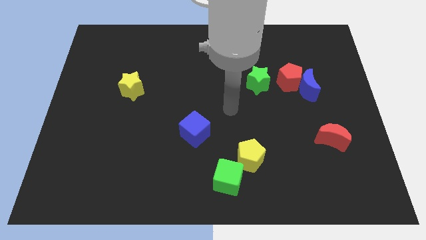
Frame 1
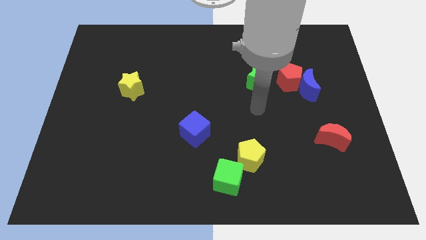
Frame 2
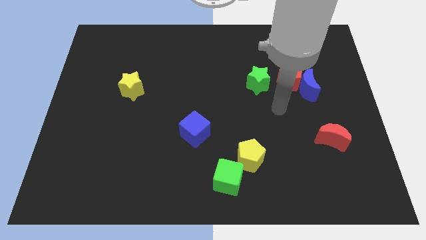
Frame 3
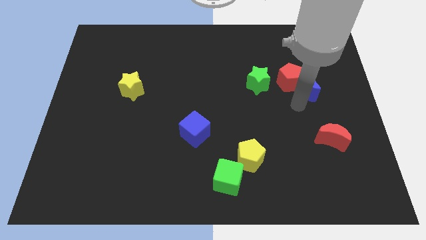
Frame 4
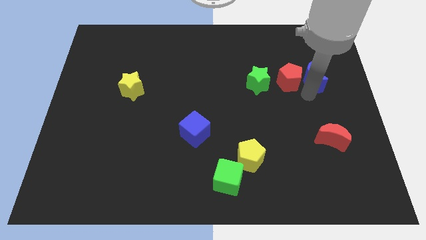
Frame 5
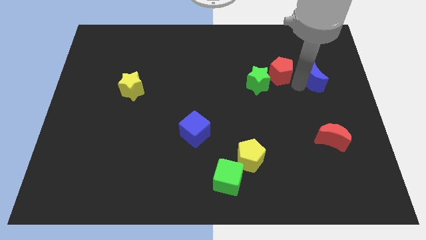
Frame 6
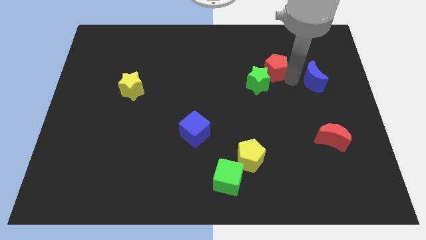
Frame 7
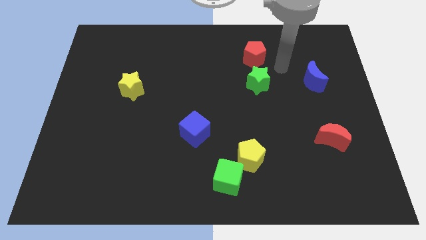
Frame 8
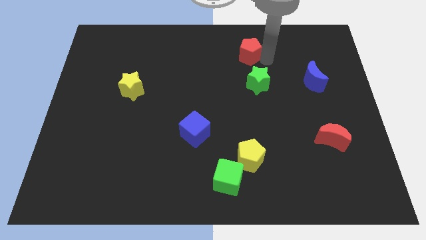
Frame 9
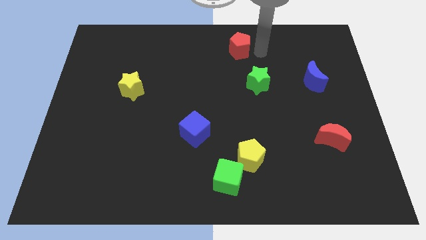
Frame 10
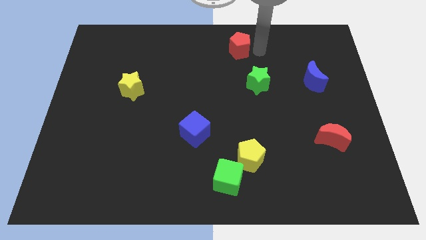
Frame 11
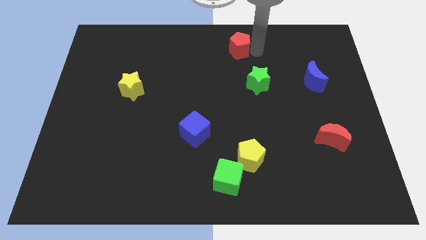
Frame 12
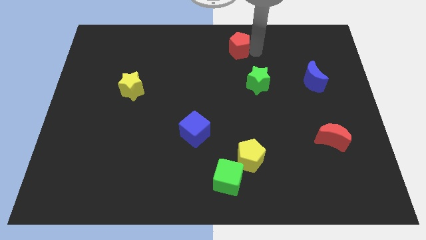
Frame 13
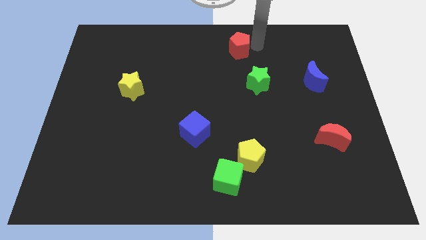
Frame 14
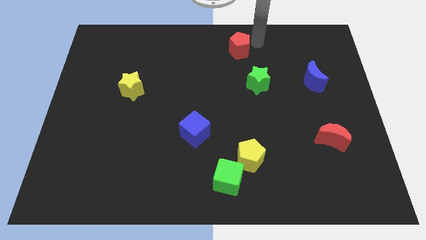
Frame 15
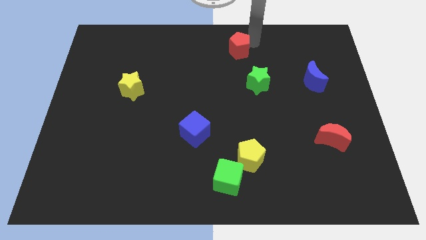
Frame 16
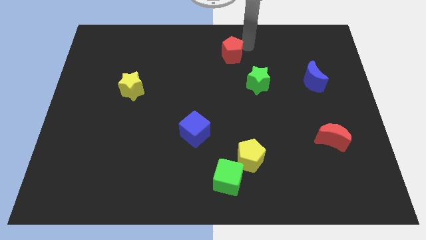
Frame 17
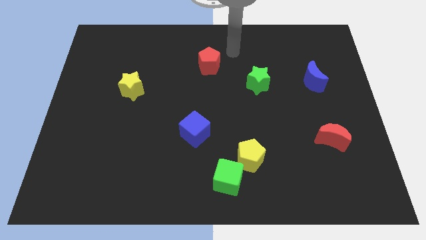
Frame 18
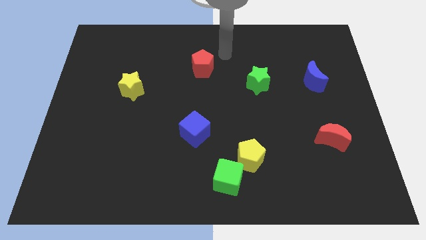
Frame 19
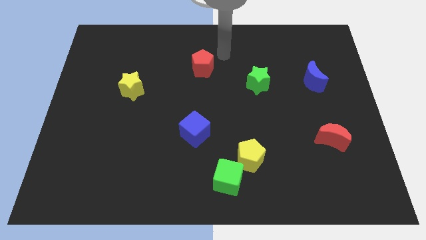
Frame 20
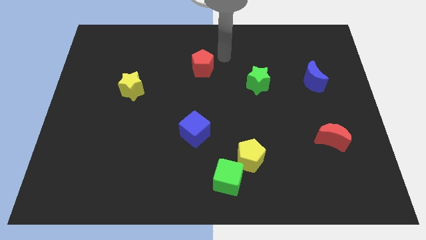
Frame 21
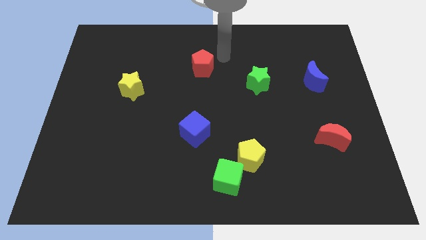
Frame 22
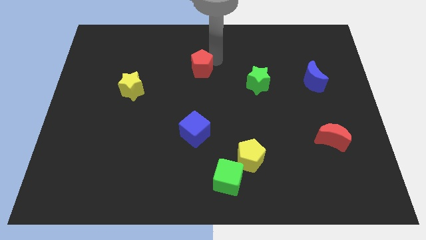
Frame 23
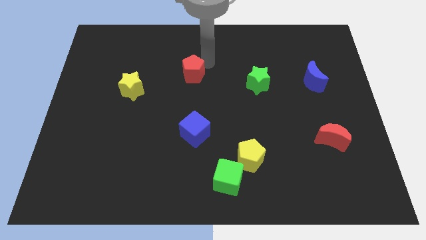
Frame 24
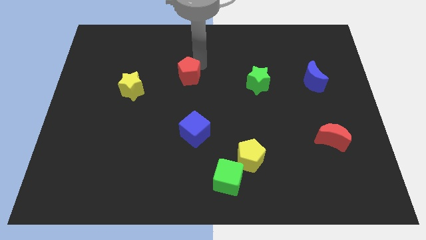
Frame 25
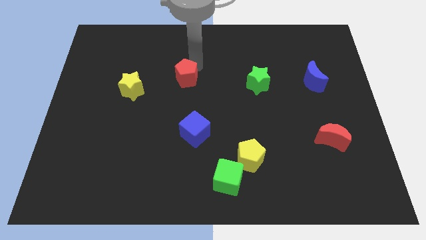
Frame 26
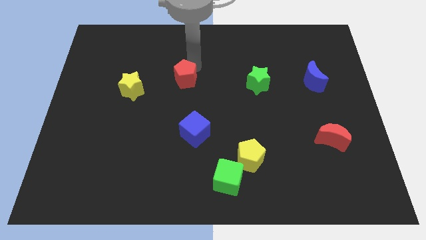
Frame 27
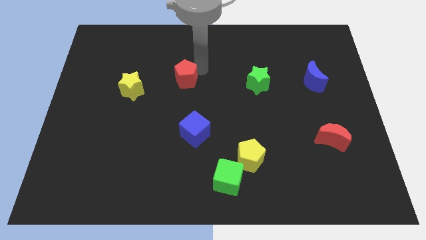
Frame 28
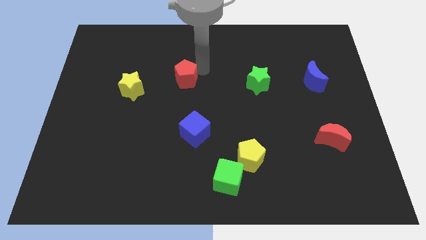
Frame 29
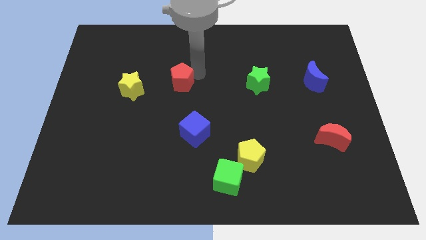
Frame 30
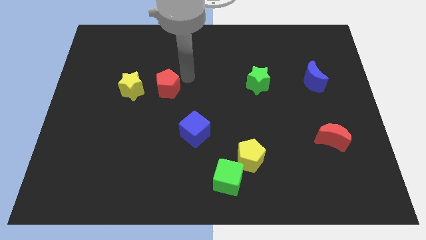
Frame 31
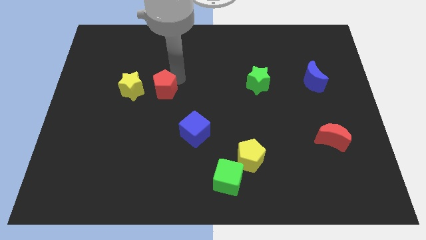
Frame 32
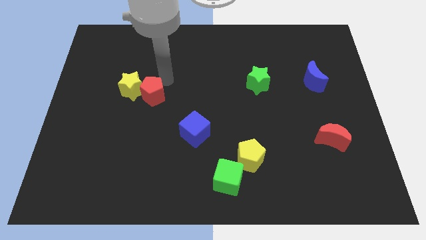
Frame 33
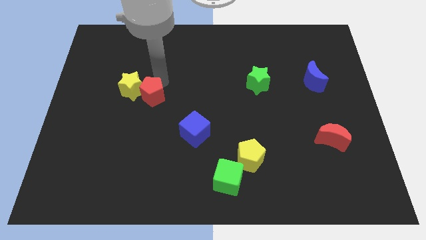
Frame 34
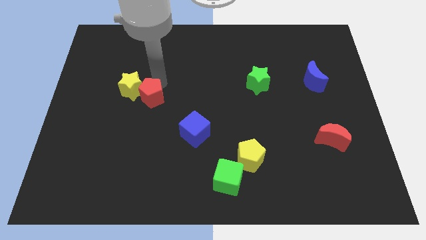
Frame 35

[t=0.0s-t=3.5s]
move the red pentagon towards the yellow star

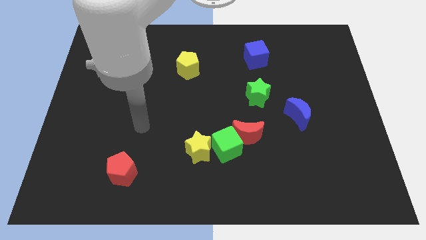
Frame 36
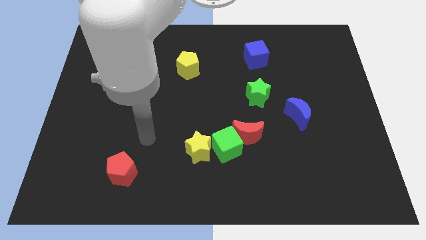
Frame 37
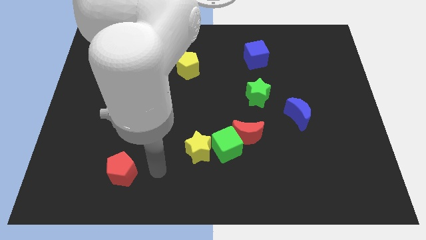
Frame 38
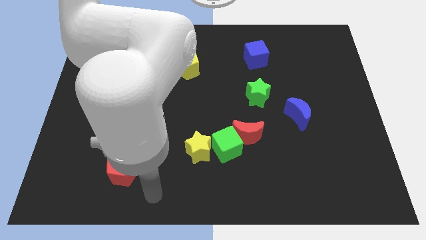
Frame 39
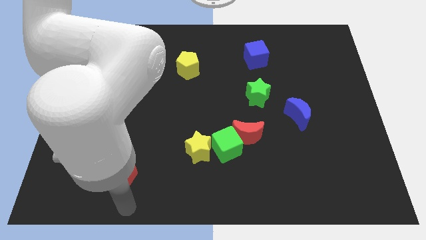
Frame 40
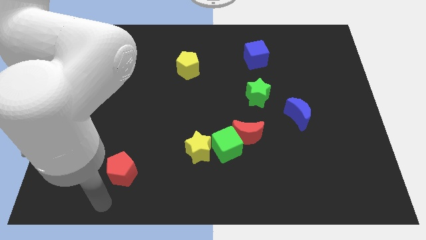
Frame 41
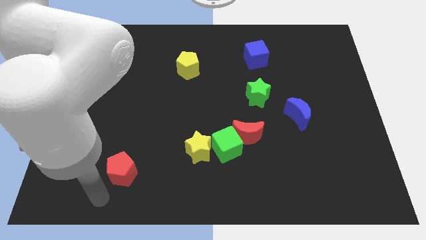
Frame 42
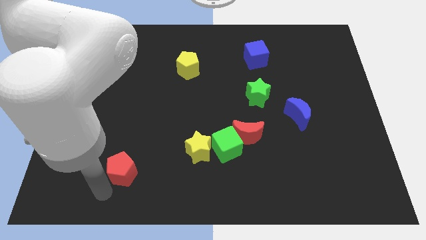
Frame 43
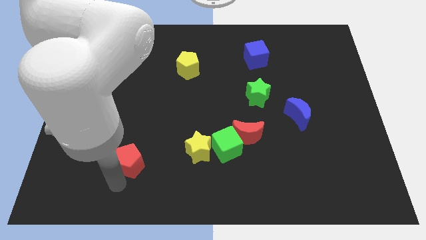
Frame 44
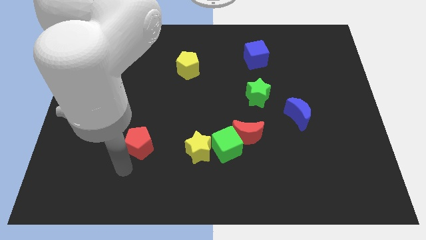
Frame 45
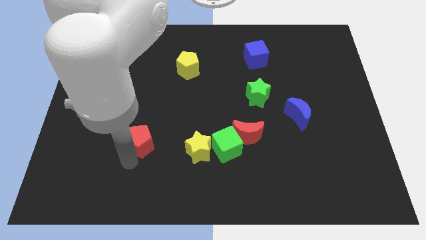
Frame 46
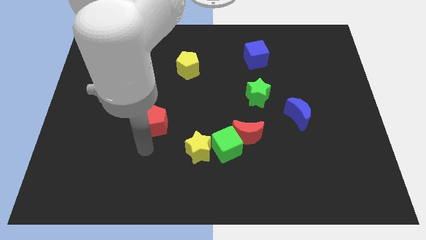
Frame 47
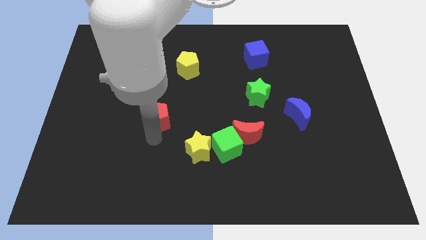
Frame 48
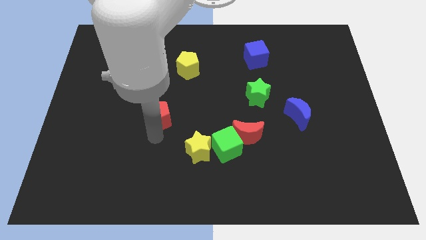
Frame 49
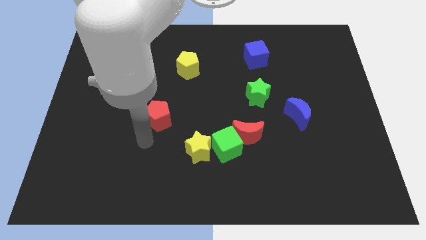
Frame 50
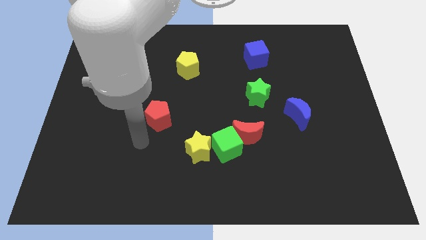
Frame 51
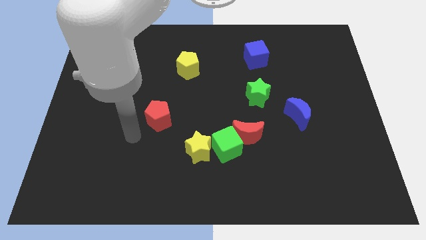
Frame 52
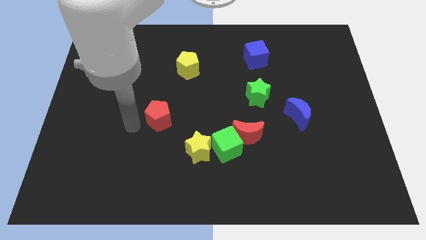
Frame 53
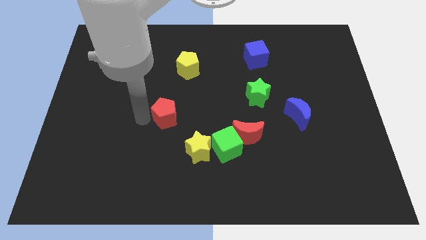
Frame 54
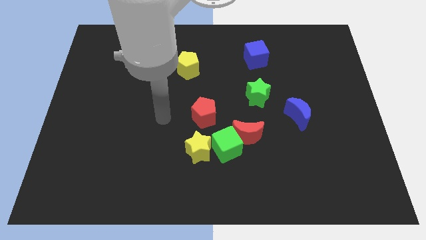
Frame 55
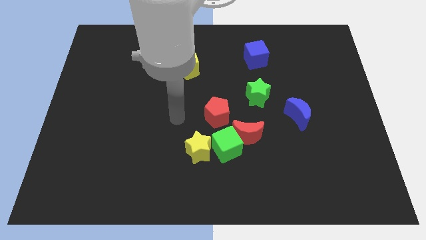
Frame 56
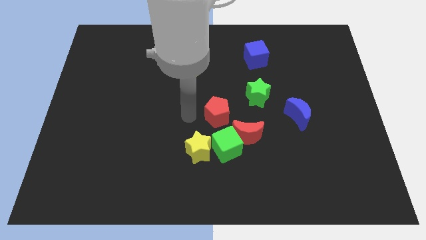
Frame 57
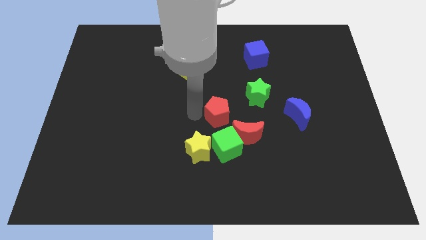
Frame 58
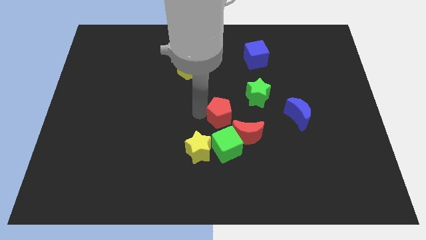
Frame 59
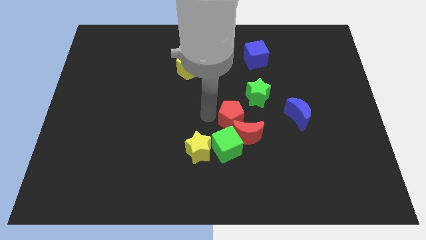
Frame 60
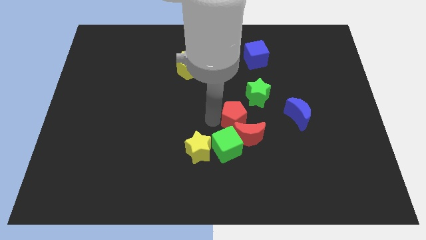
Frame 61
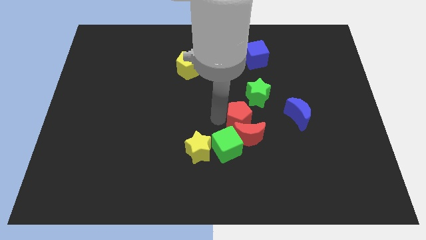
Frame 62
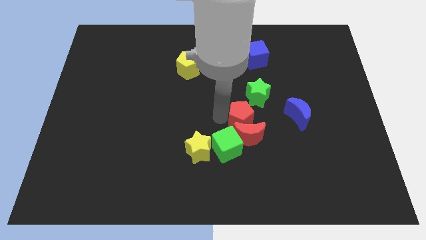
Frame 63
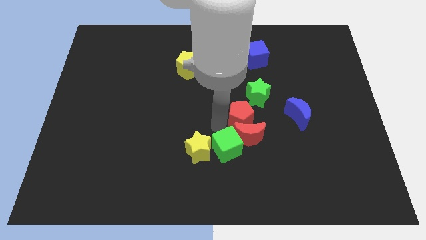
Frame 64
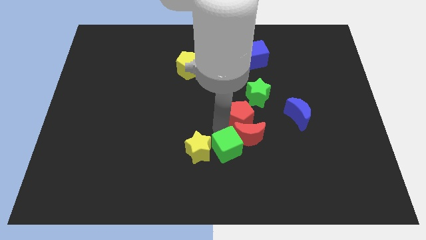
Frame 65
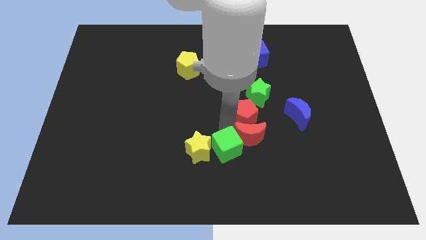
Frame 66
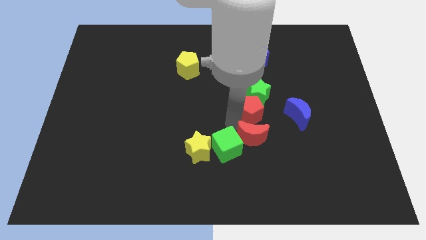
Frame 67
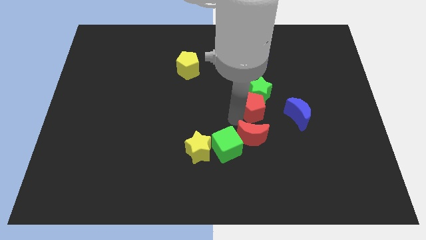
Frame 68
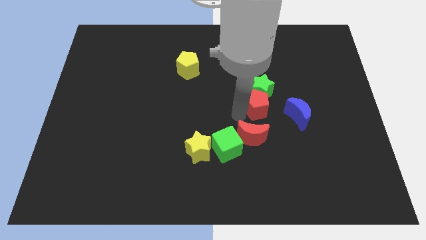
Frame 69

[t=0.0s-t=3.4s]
move the red pentagon towards the green star

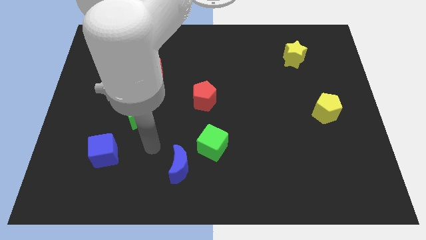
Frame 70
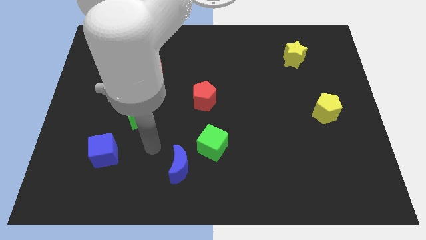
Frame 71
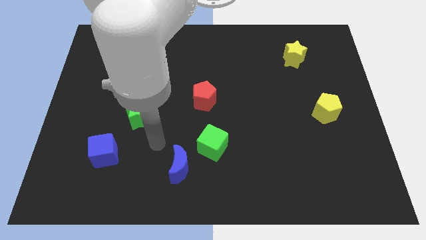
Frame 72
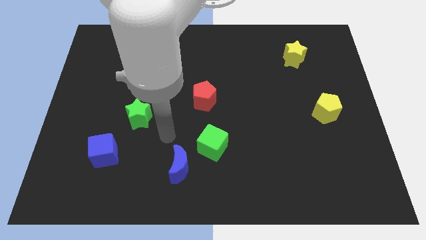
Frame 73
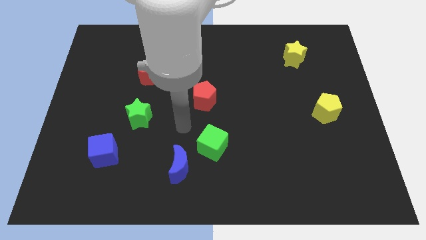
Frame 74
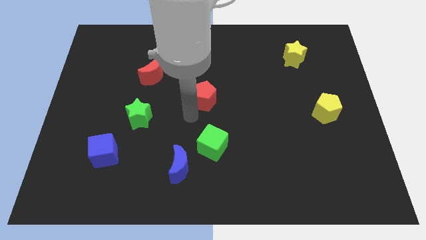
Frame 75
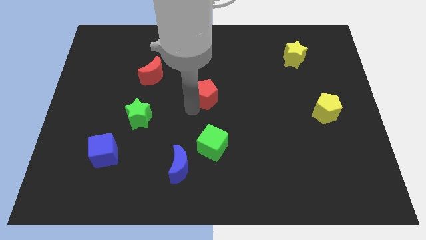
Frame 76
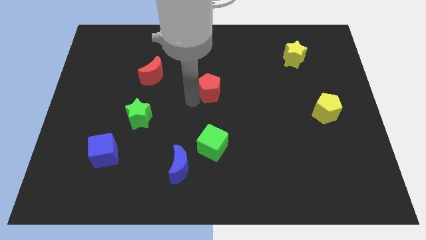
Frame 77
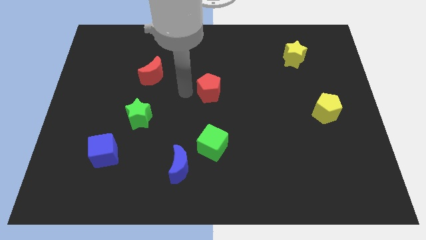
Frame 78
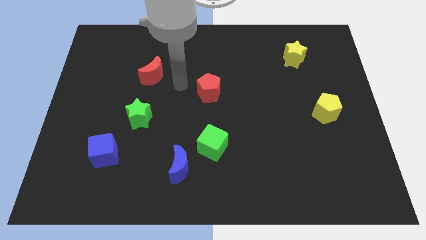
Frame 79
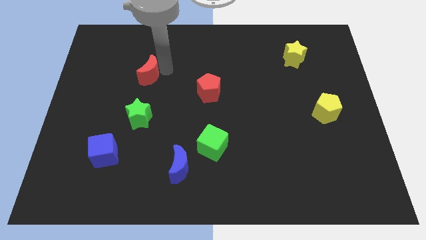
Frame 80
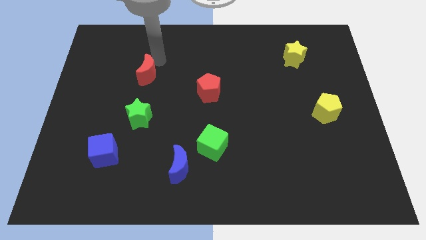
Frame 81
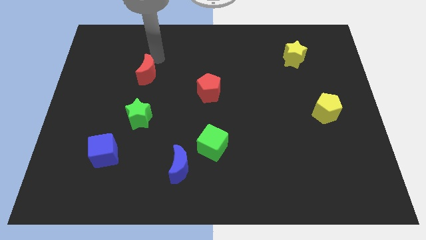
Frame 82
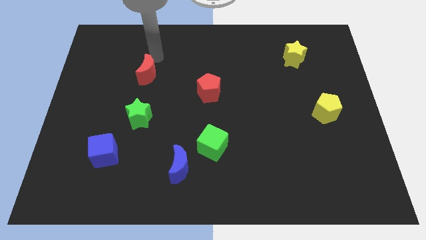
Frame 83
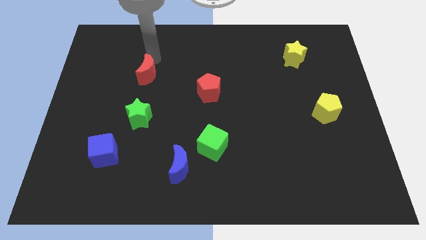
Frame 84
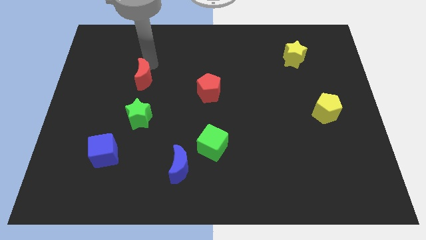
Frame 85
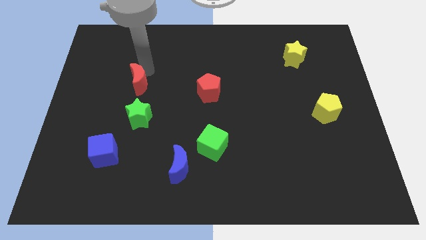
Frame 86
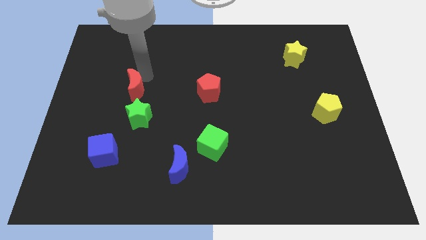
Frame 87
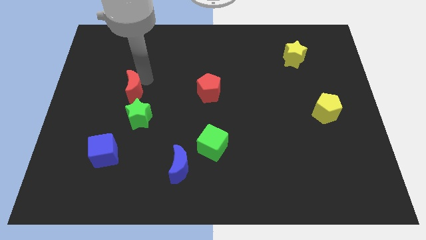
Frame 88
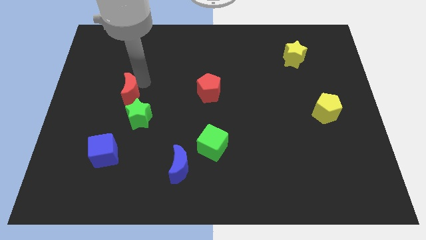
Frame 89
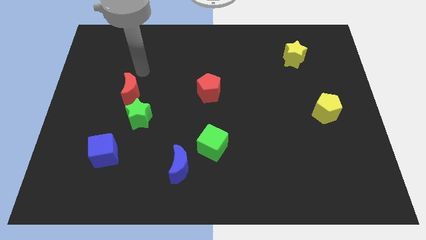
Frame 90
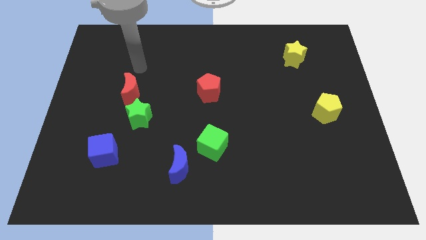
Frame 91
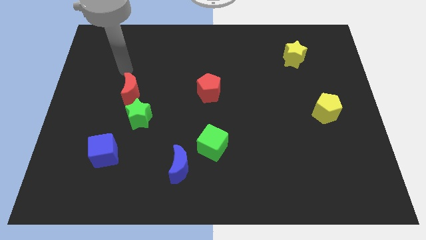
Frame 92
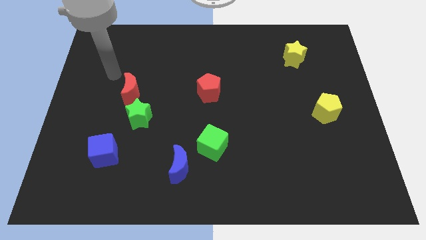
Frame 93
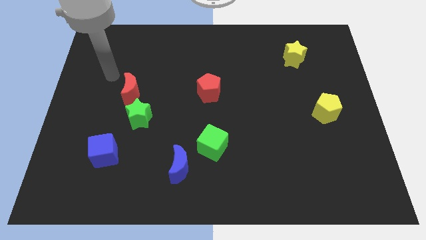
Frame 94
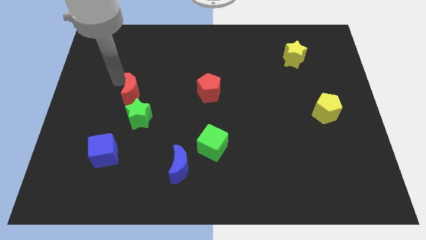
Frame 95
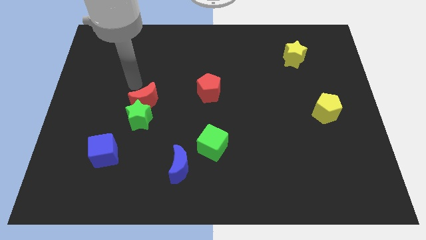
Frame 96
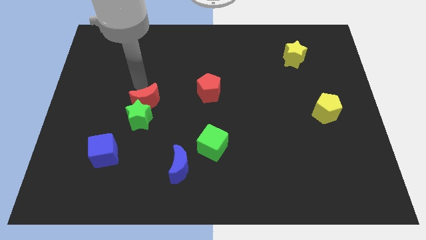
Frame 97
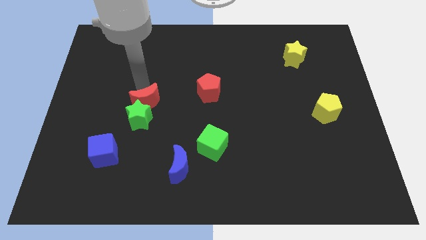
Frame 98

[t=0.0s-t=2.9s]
move the red moon to the green star
